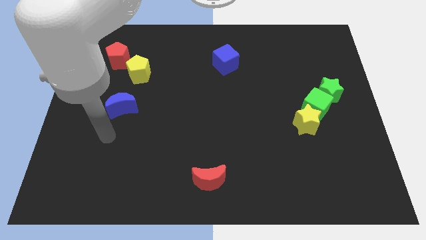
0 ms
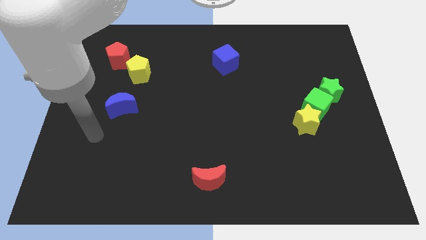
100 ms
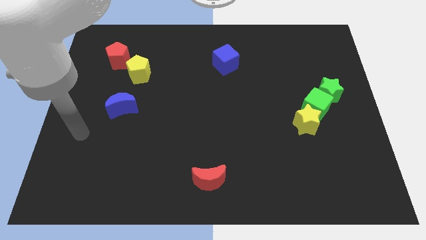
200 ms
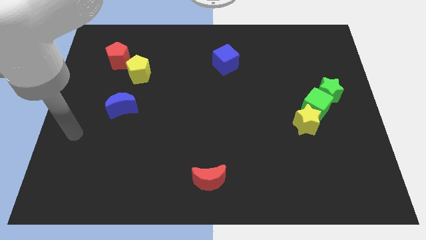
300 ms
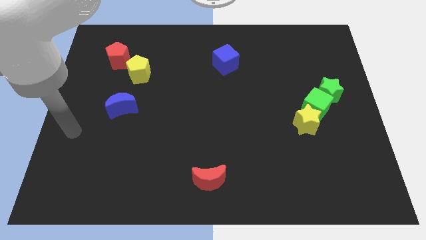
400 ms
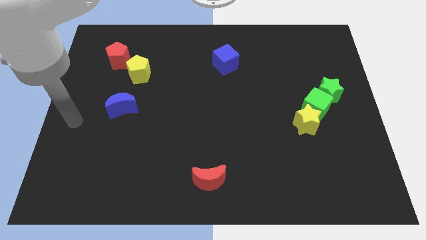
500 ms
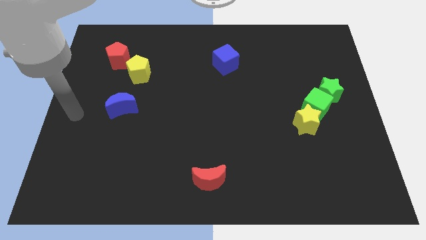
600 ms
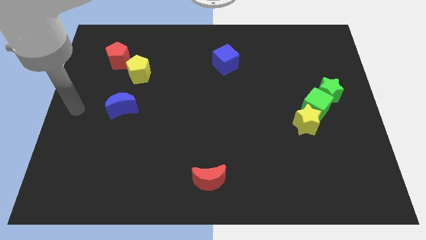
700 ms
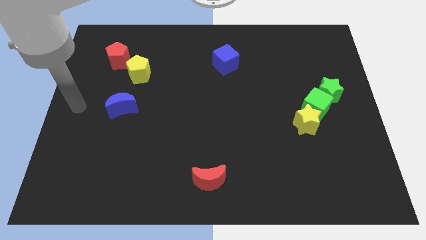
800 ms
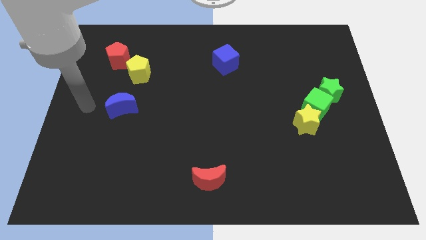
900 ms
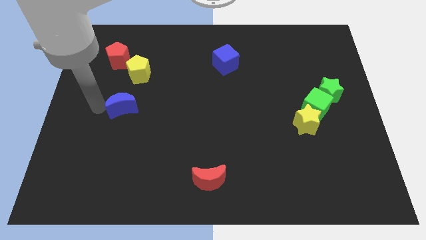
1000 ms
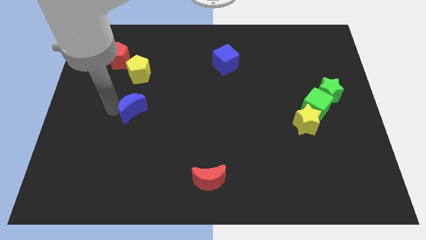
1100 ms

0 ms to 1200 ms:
move arm to left of blue moon

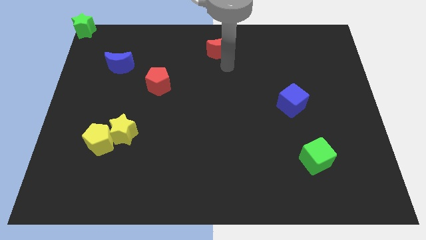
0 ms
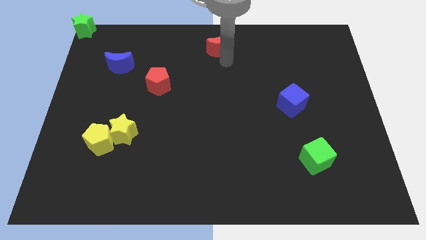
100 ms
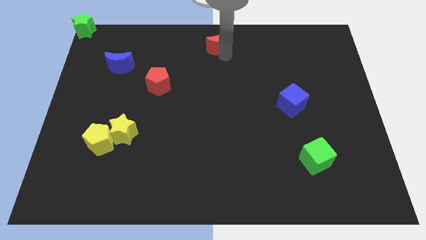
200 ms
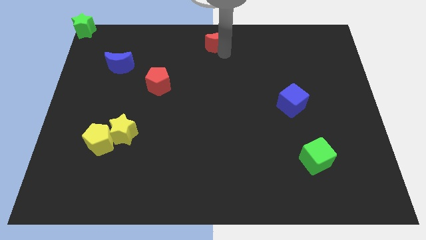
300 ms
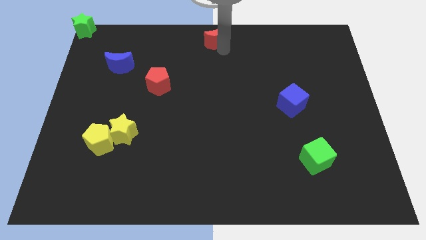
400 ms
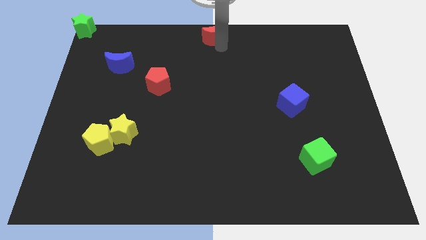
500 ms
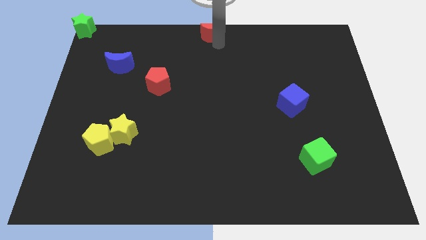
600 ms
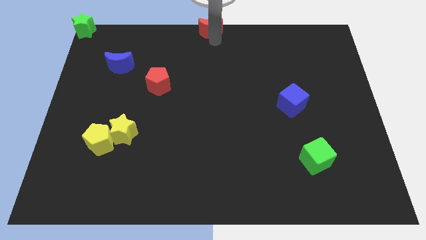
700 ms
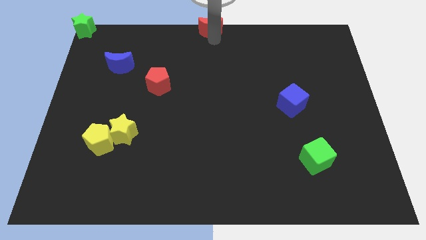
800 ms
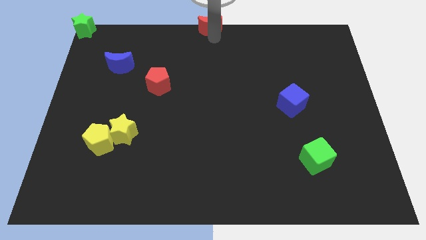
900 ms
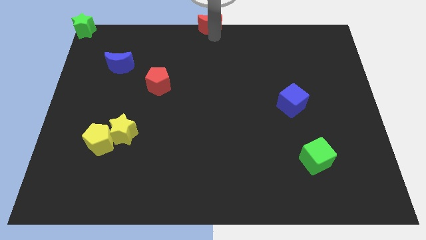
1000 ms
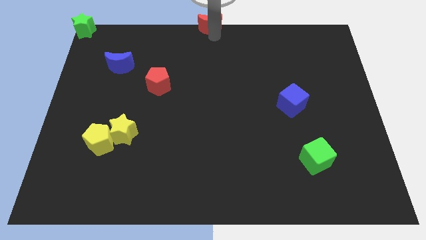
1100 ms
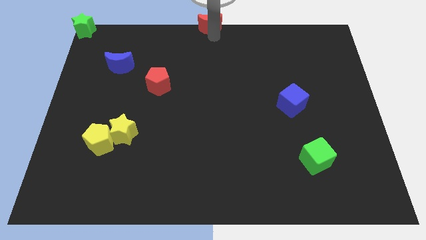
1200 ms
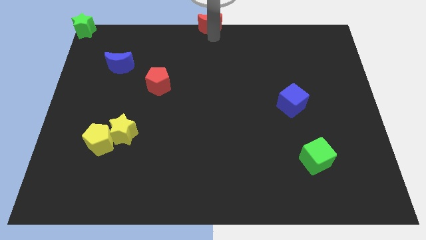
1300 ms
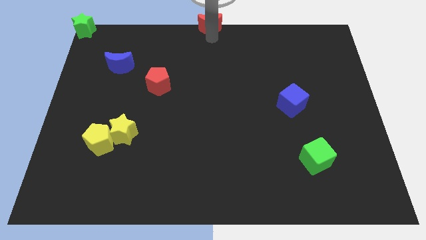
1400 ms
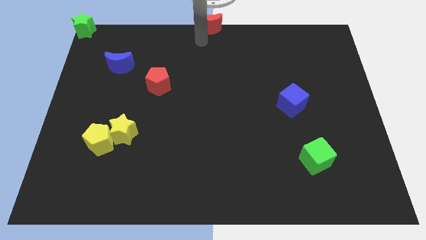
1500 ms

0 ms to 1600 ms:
push the red crescent to the top center of the board

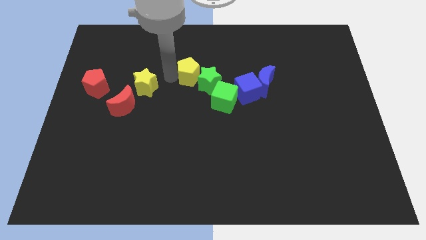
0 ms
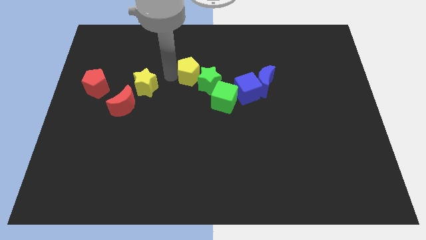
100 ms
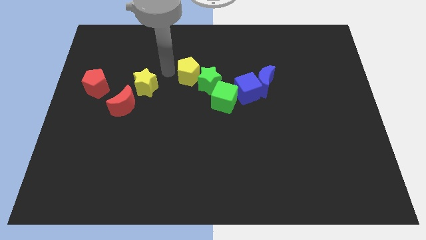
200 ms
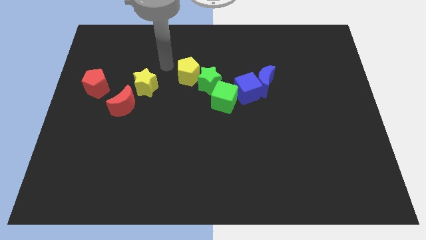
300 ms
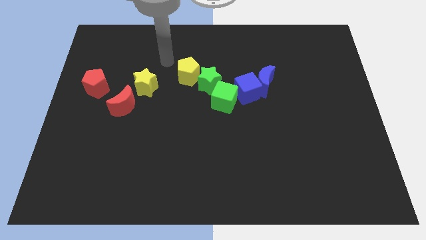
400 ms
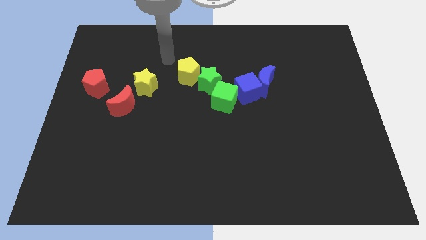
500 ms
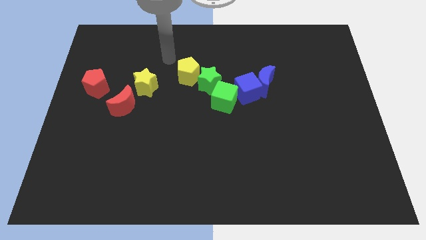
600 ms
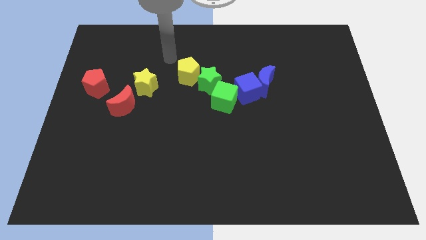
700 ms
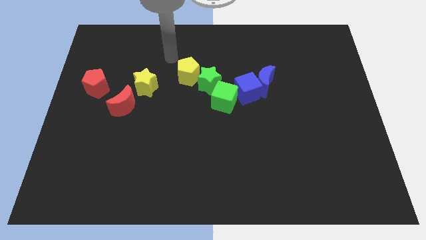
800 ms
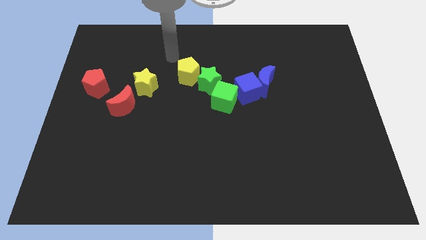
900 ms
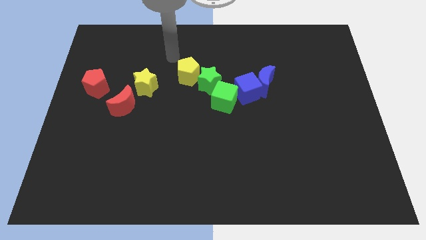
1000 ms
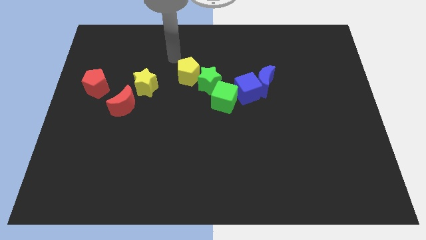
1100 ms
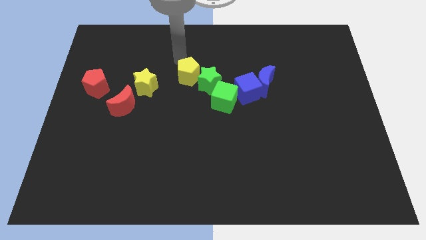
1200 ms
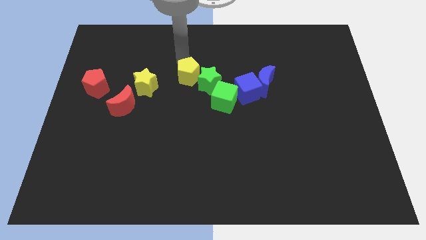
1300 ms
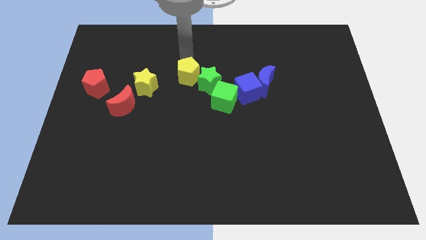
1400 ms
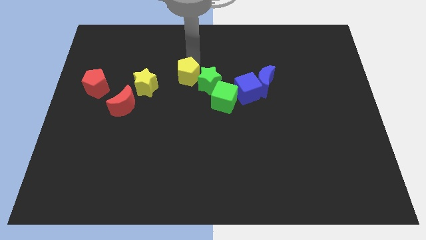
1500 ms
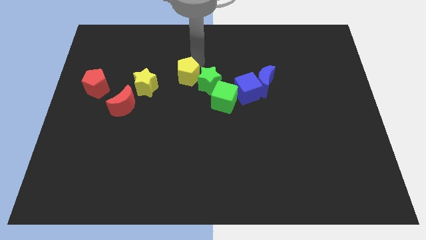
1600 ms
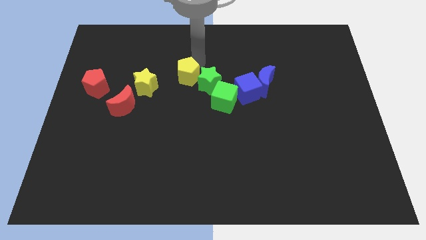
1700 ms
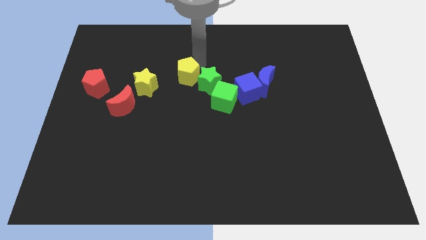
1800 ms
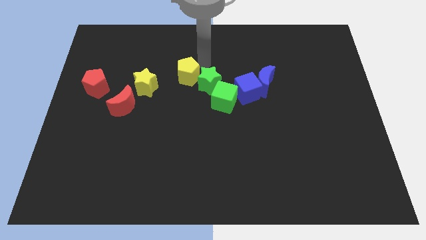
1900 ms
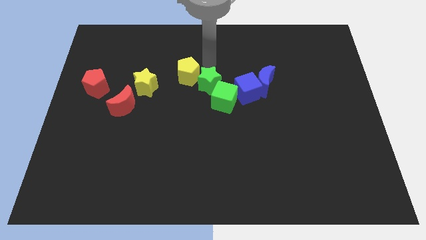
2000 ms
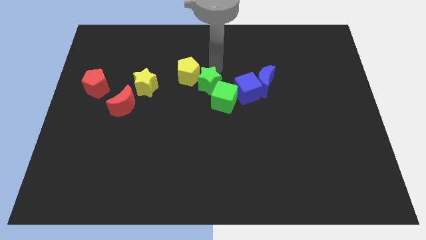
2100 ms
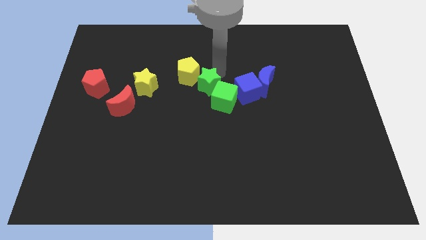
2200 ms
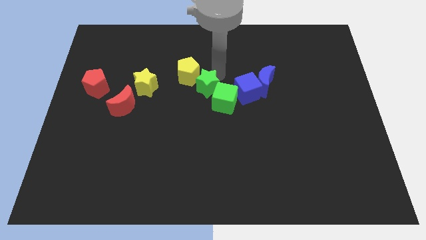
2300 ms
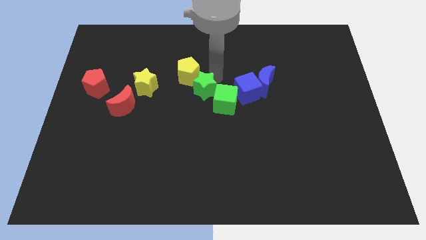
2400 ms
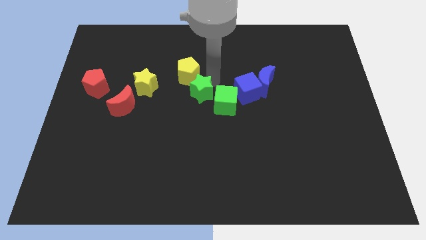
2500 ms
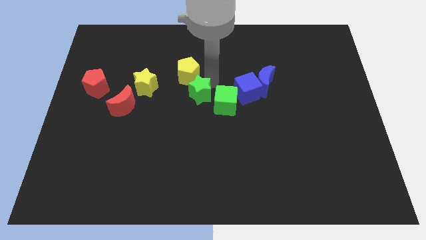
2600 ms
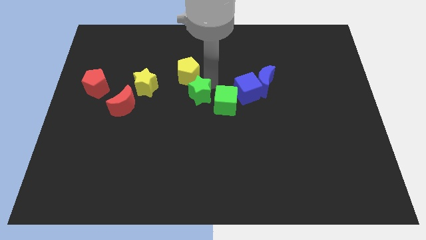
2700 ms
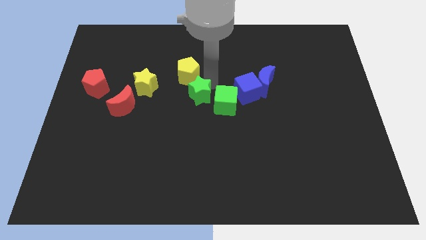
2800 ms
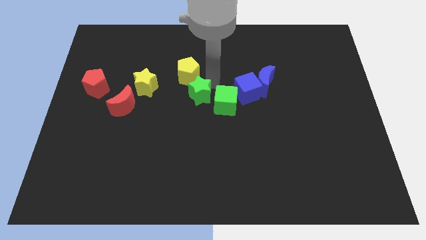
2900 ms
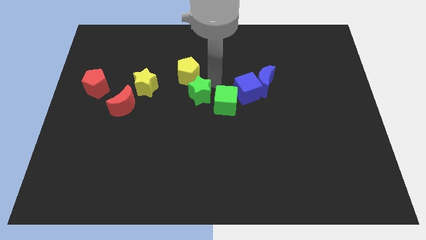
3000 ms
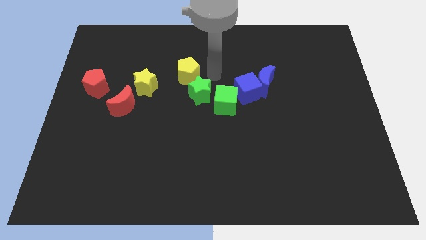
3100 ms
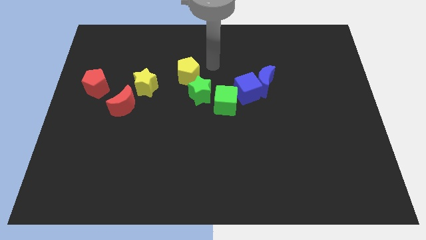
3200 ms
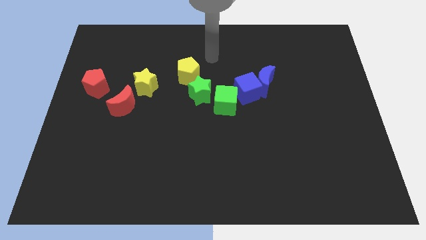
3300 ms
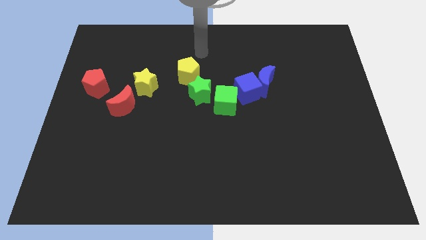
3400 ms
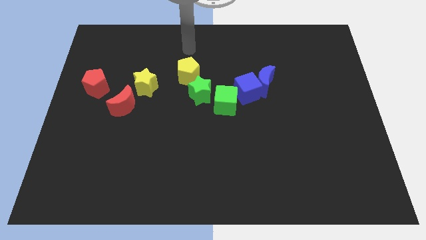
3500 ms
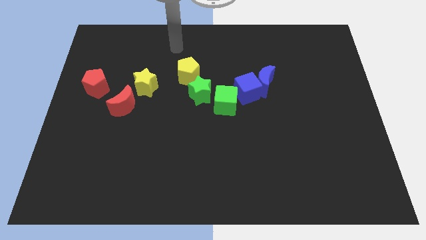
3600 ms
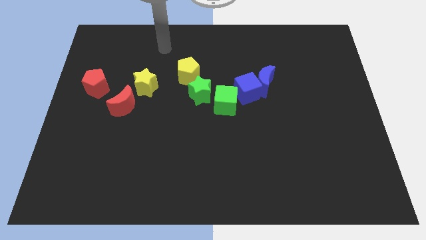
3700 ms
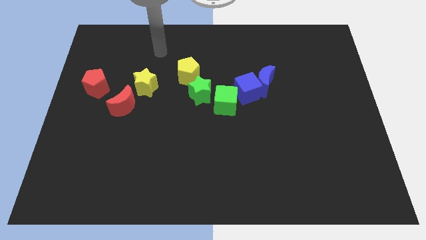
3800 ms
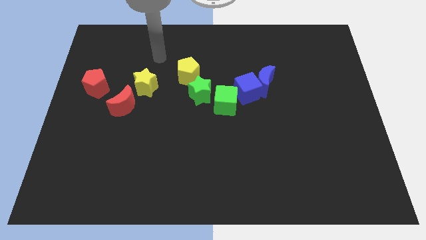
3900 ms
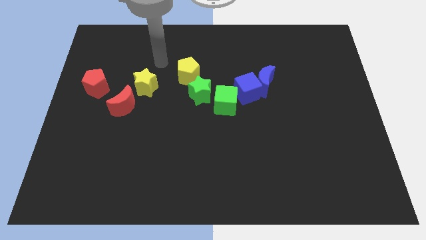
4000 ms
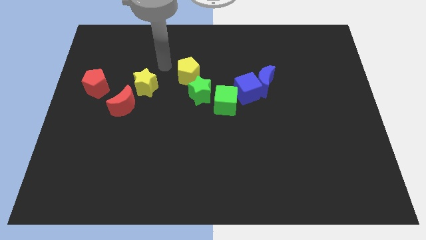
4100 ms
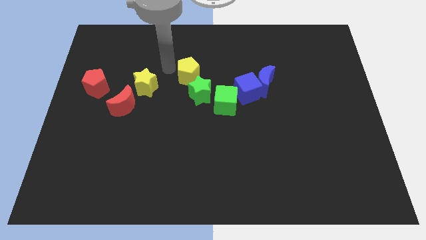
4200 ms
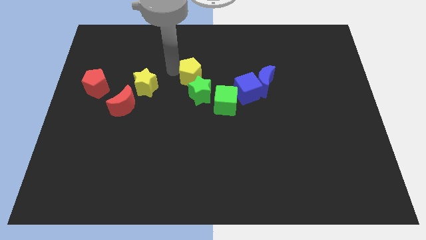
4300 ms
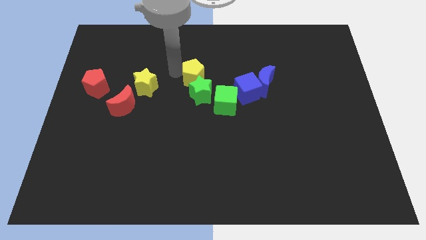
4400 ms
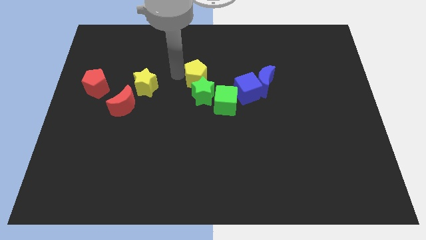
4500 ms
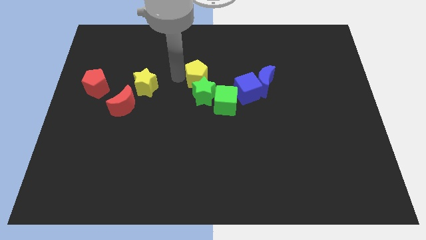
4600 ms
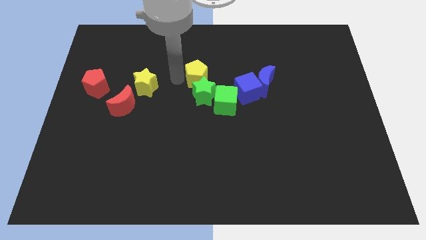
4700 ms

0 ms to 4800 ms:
place green star to the bottom yellow pentagon

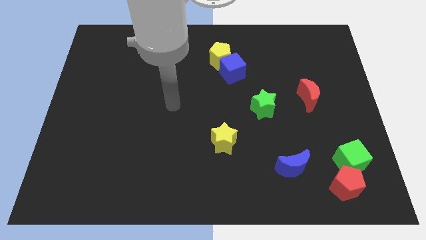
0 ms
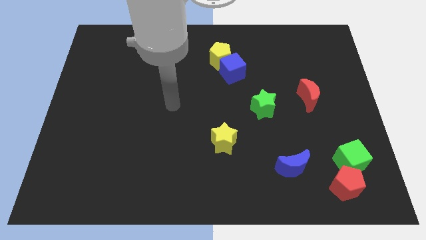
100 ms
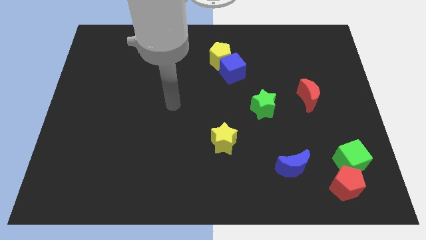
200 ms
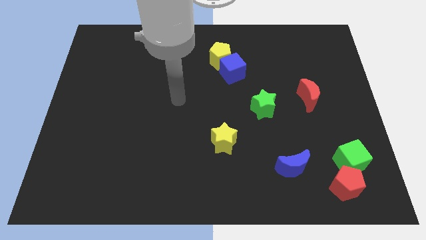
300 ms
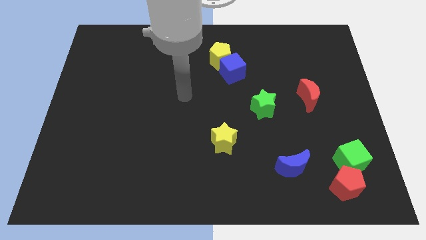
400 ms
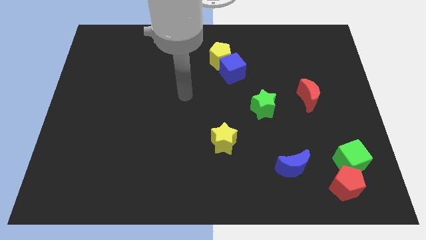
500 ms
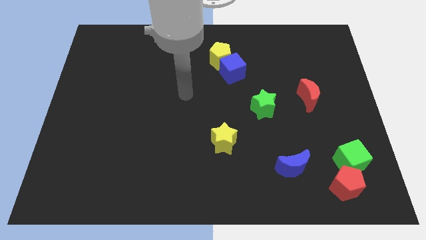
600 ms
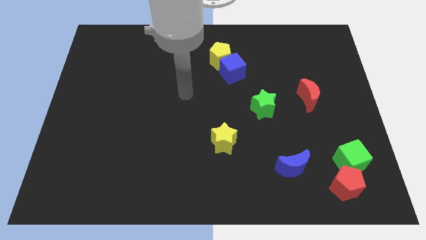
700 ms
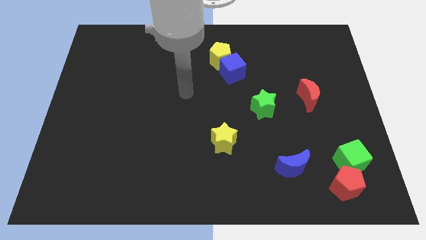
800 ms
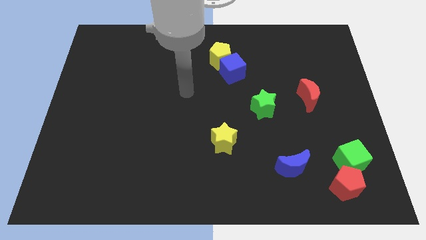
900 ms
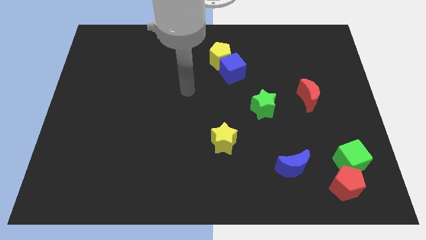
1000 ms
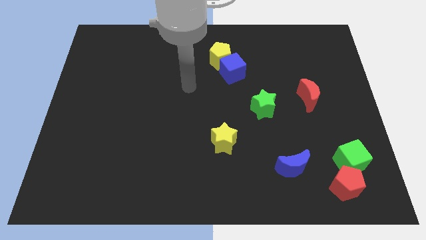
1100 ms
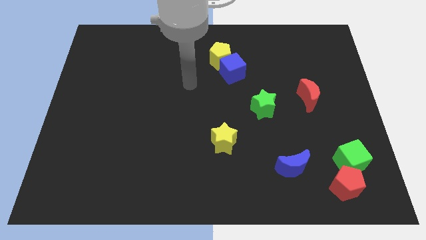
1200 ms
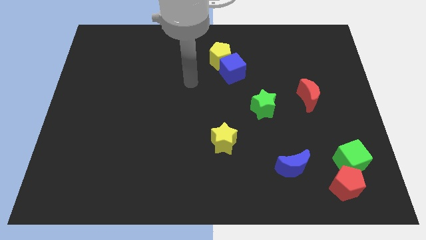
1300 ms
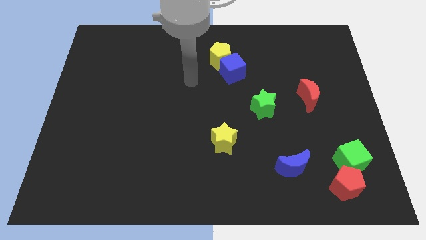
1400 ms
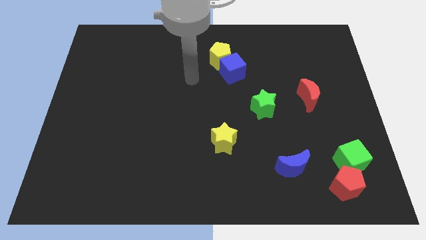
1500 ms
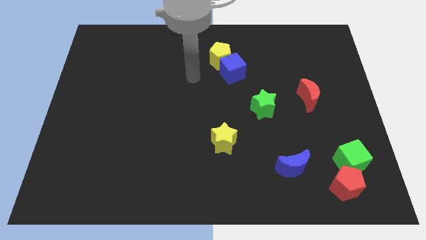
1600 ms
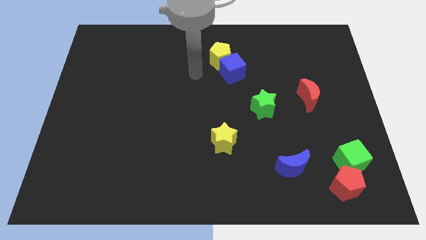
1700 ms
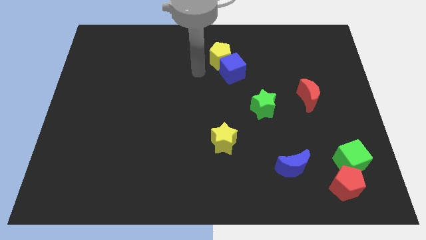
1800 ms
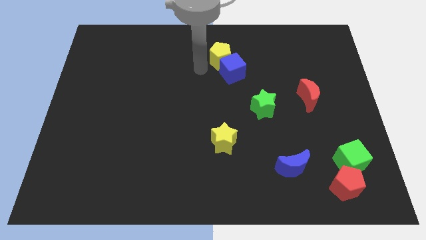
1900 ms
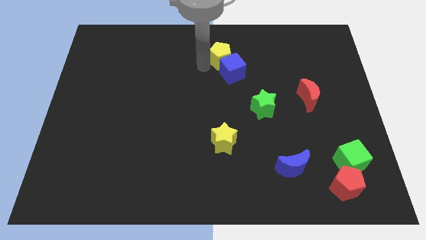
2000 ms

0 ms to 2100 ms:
point your arm at the left of the yellow pentagon
